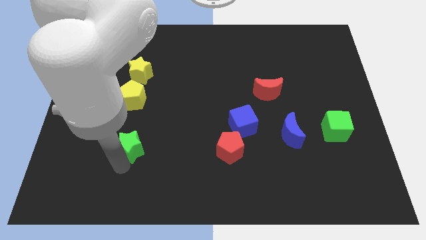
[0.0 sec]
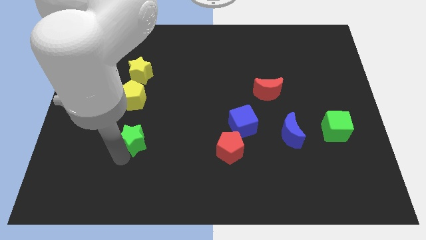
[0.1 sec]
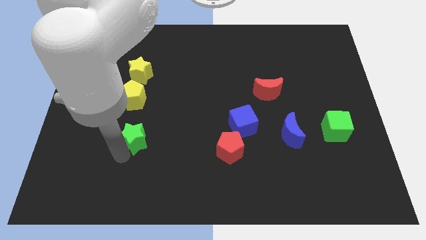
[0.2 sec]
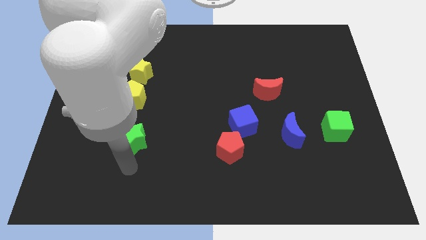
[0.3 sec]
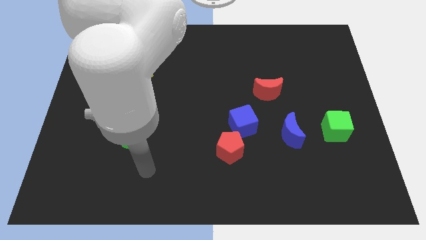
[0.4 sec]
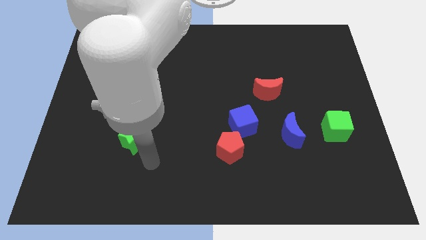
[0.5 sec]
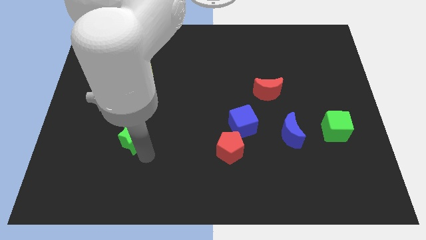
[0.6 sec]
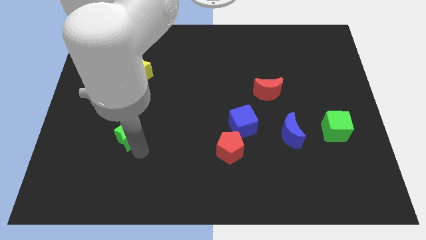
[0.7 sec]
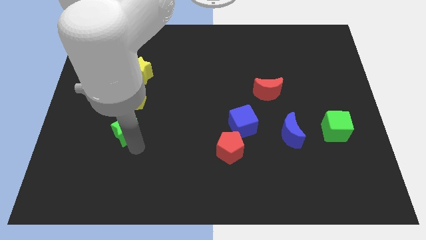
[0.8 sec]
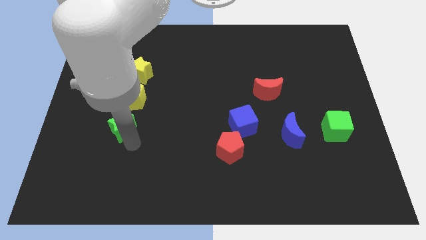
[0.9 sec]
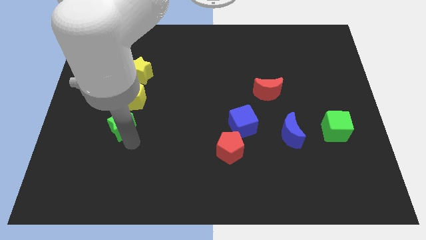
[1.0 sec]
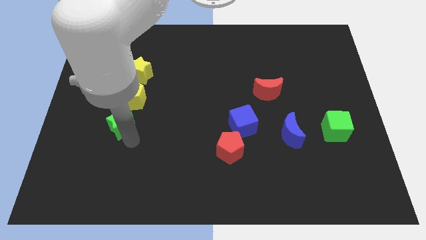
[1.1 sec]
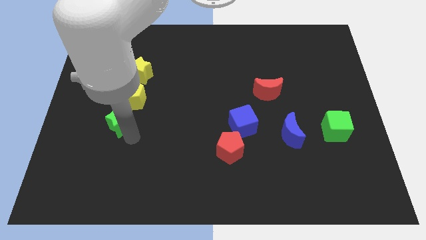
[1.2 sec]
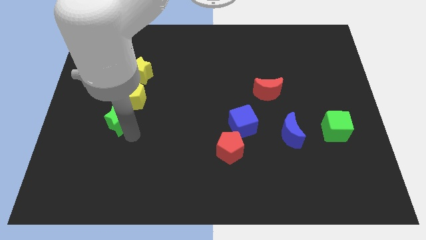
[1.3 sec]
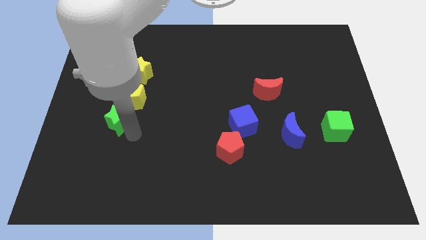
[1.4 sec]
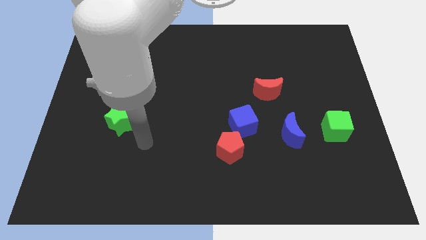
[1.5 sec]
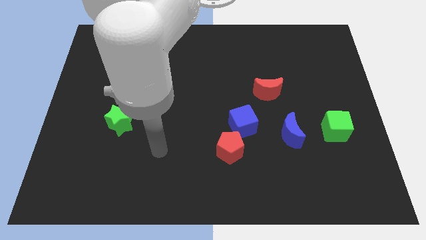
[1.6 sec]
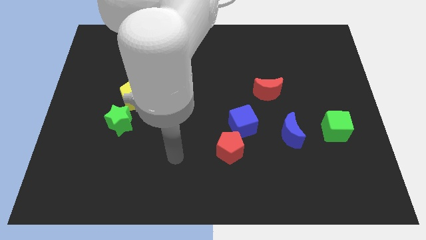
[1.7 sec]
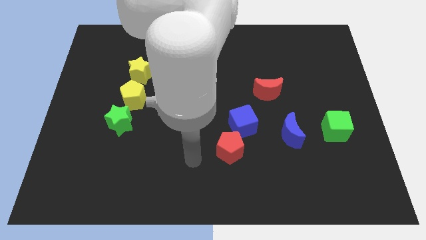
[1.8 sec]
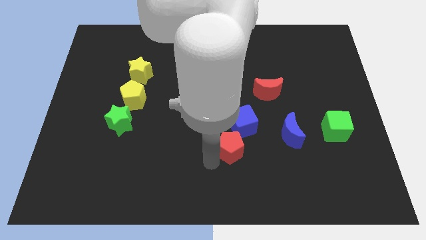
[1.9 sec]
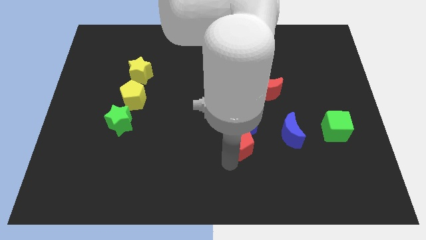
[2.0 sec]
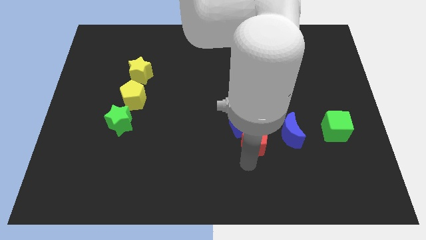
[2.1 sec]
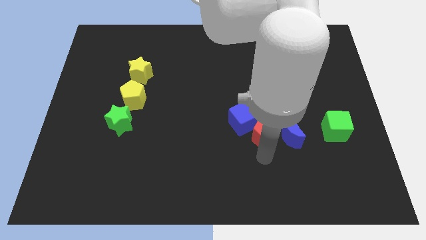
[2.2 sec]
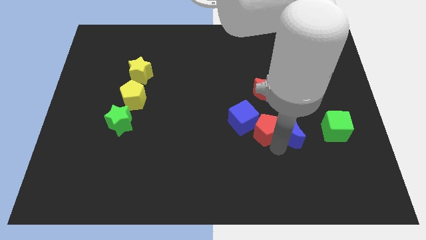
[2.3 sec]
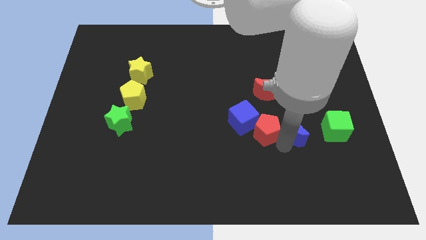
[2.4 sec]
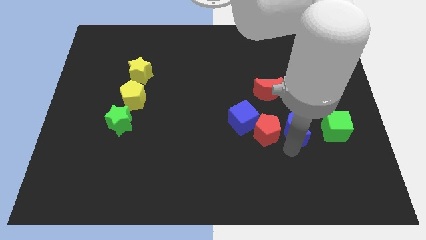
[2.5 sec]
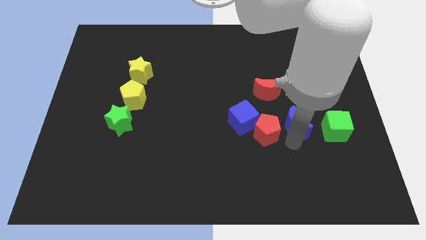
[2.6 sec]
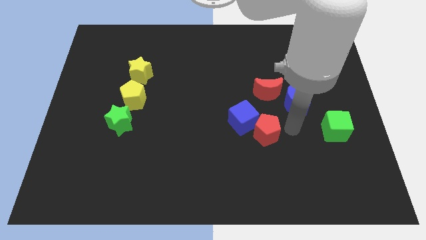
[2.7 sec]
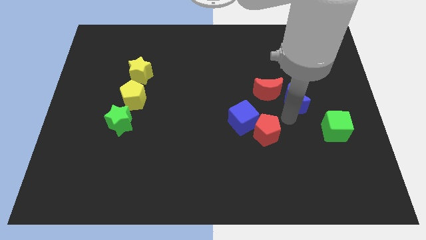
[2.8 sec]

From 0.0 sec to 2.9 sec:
place the blue moon diagonal to the green cube

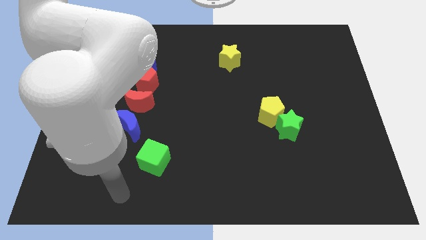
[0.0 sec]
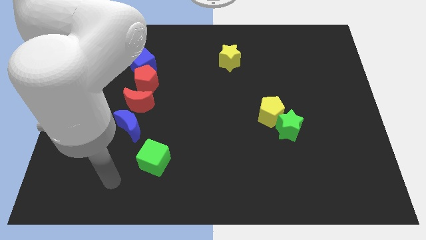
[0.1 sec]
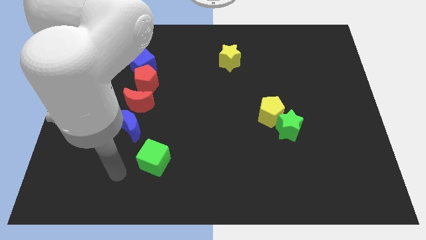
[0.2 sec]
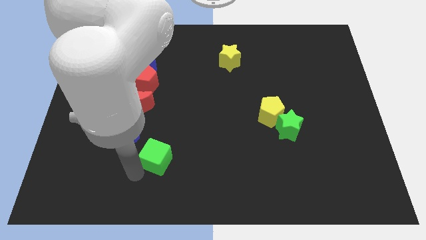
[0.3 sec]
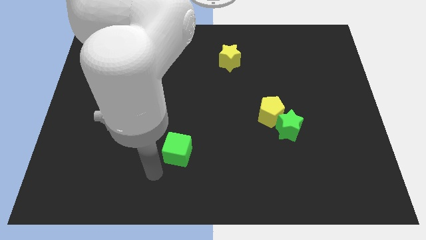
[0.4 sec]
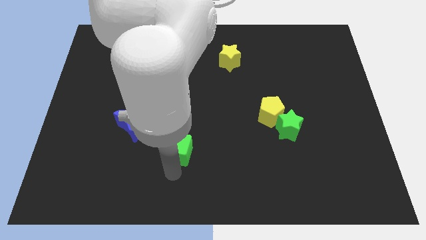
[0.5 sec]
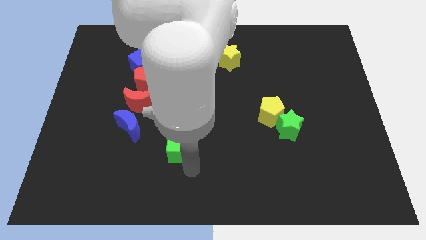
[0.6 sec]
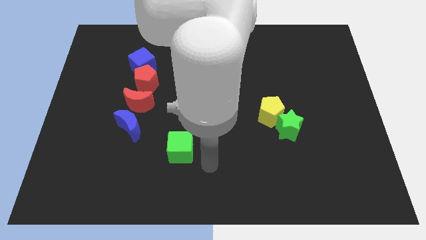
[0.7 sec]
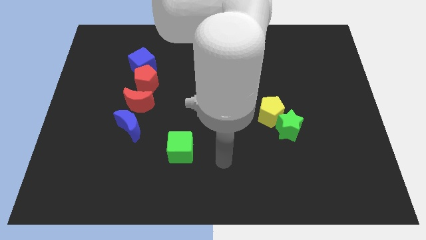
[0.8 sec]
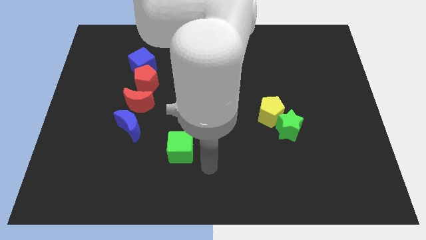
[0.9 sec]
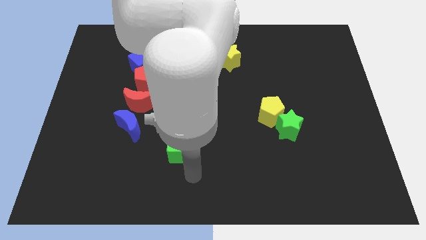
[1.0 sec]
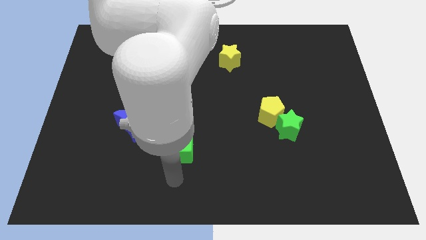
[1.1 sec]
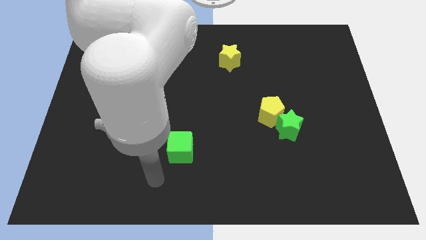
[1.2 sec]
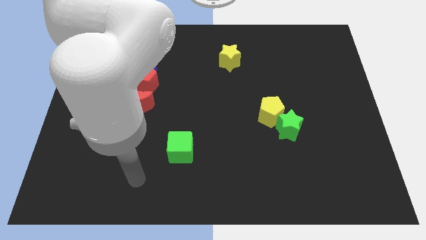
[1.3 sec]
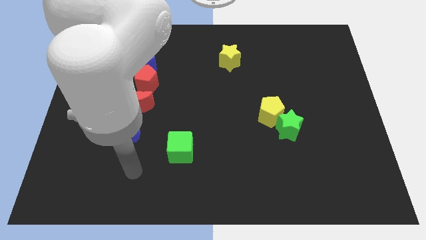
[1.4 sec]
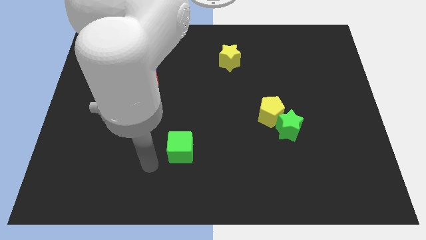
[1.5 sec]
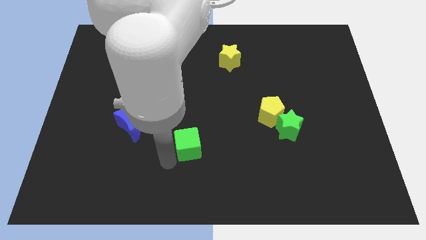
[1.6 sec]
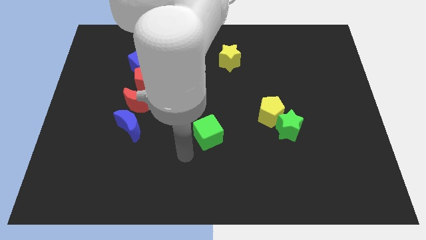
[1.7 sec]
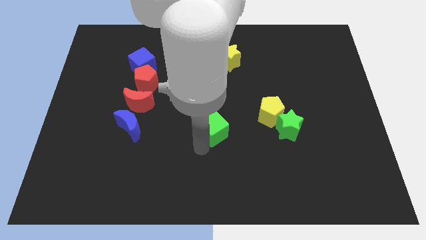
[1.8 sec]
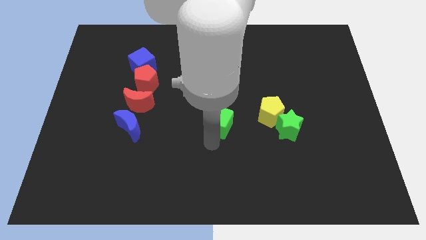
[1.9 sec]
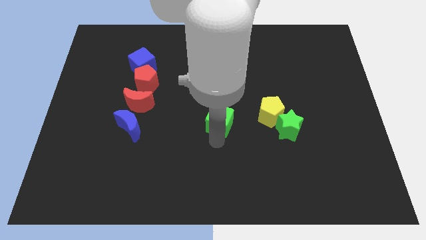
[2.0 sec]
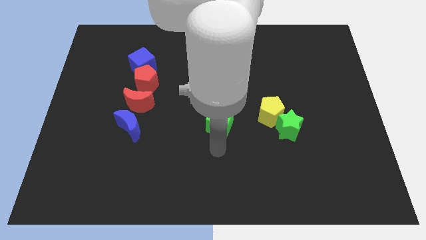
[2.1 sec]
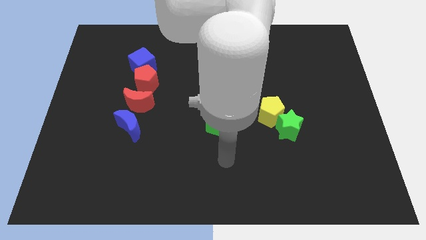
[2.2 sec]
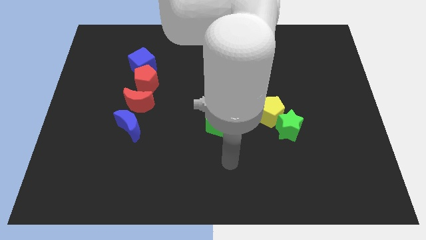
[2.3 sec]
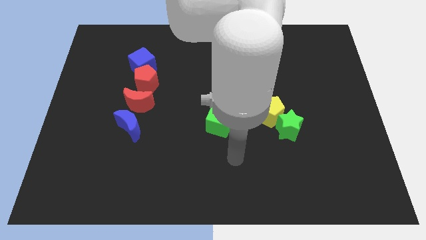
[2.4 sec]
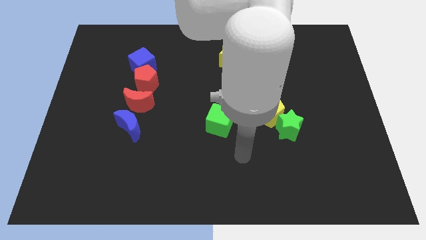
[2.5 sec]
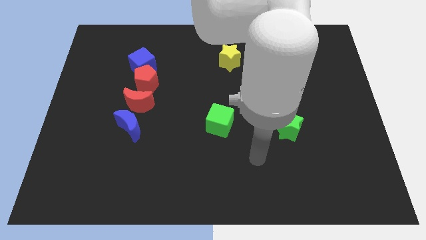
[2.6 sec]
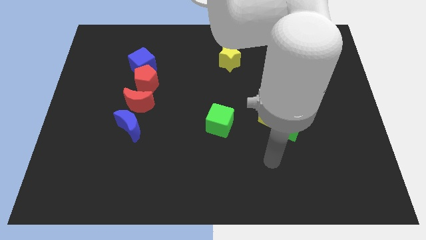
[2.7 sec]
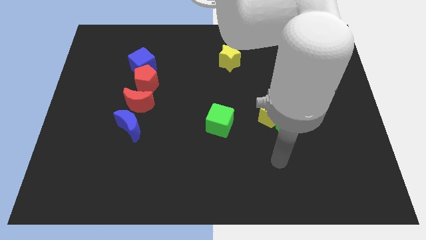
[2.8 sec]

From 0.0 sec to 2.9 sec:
place the green cube left to the yellow pentagon

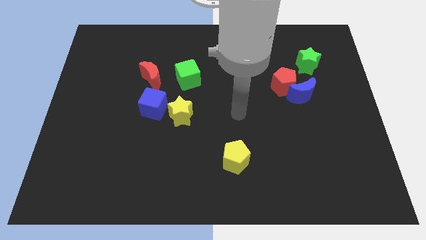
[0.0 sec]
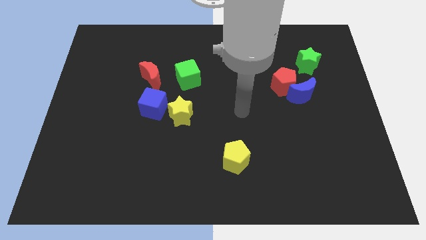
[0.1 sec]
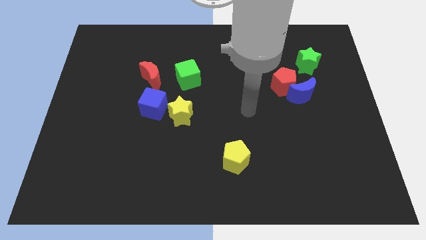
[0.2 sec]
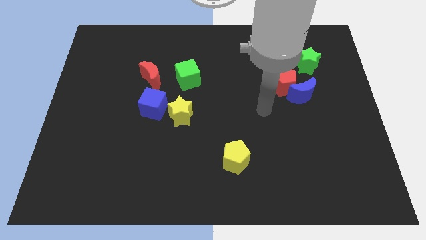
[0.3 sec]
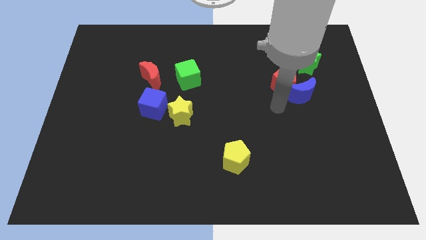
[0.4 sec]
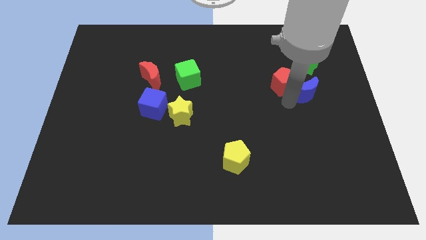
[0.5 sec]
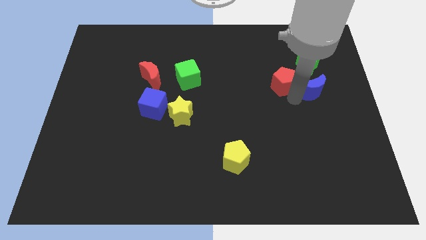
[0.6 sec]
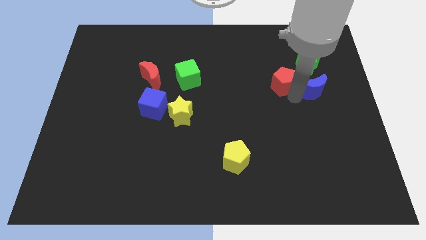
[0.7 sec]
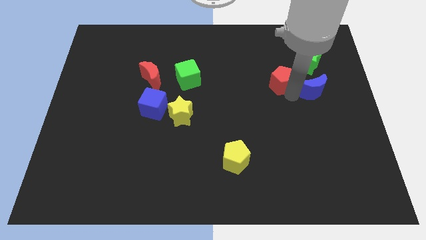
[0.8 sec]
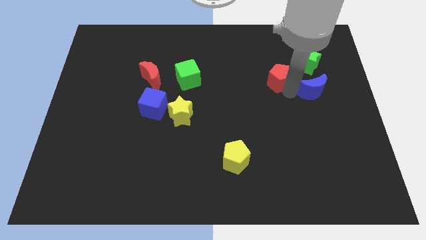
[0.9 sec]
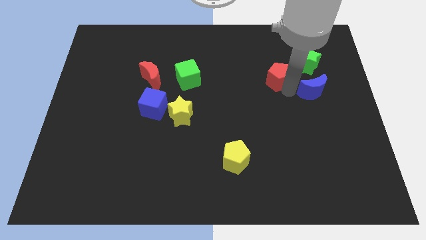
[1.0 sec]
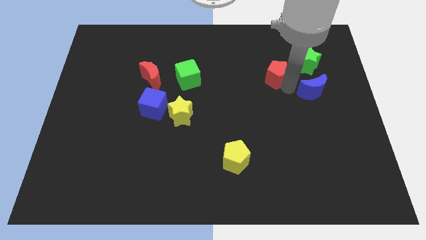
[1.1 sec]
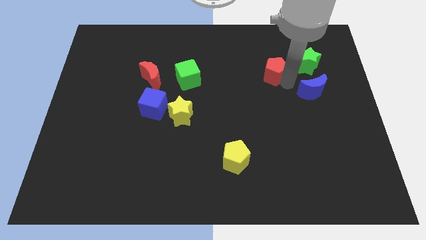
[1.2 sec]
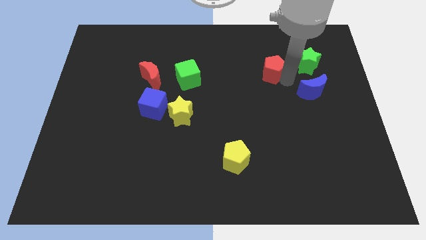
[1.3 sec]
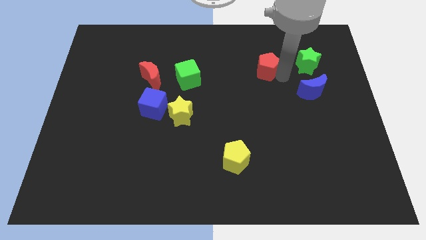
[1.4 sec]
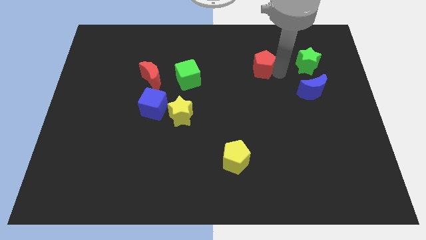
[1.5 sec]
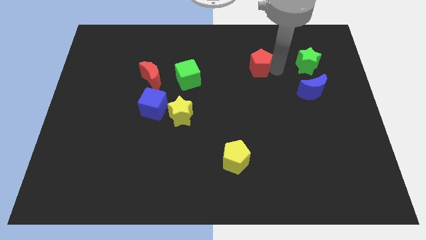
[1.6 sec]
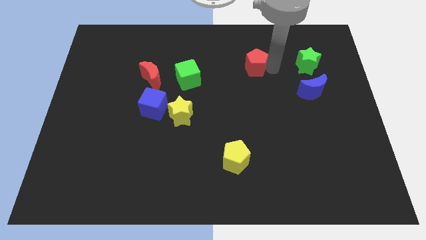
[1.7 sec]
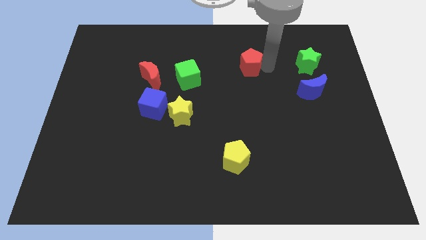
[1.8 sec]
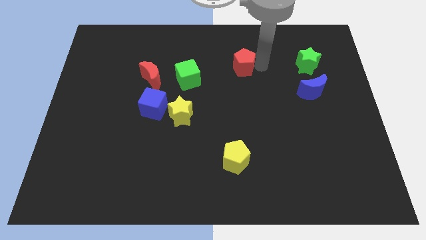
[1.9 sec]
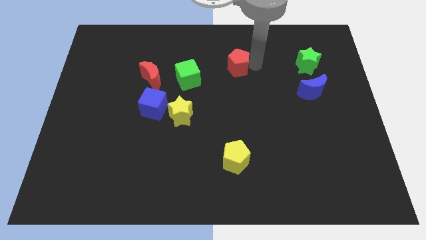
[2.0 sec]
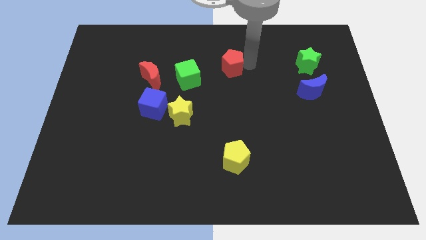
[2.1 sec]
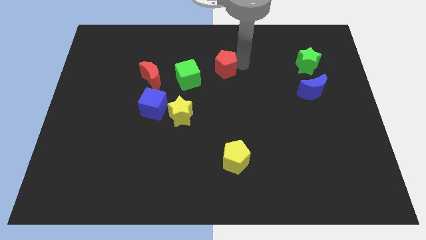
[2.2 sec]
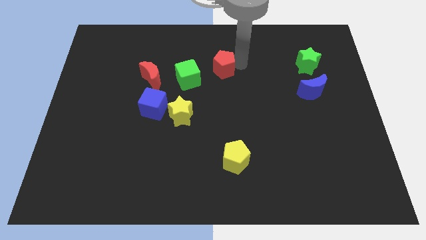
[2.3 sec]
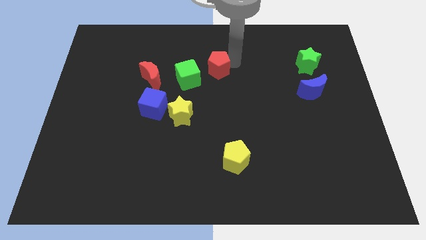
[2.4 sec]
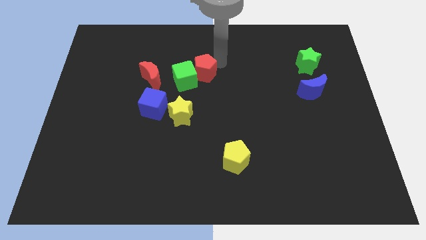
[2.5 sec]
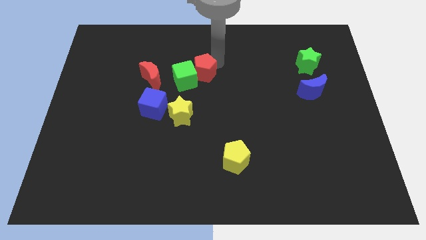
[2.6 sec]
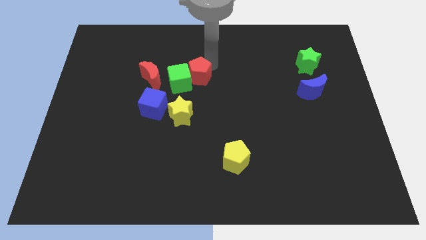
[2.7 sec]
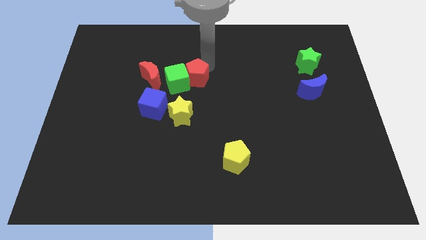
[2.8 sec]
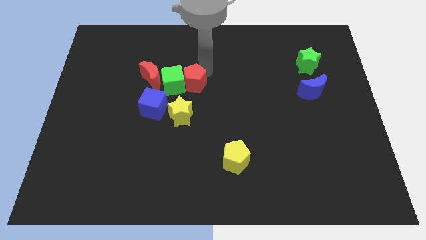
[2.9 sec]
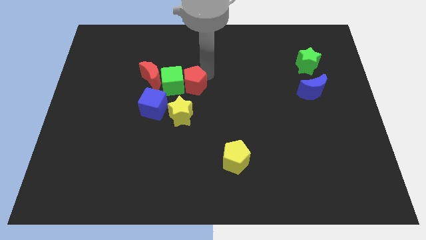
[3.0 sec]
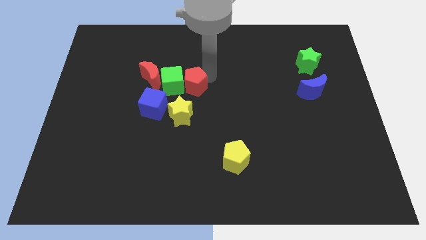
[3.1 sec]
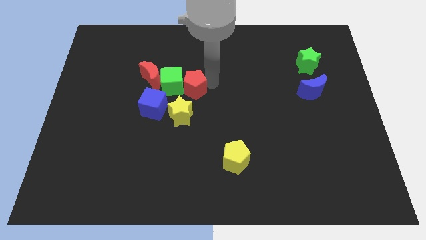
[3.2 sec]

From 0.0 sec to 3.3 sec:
push the red pentagon into the green cube
